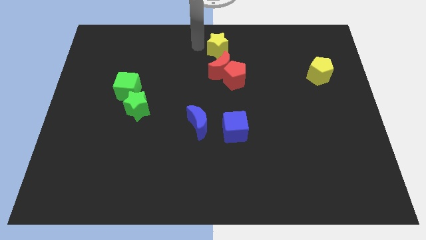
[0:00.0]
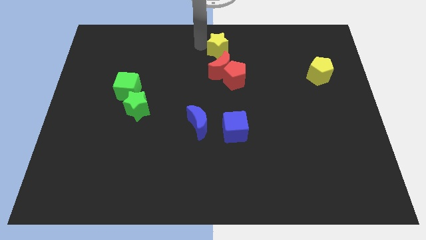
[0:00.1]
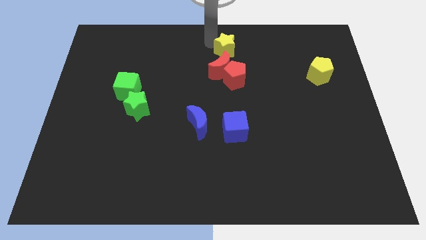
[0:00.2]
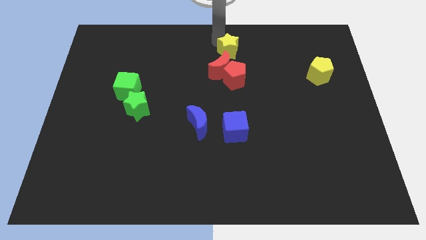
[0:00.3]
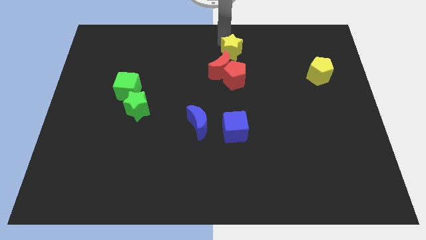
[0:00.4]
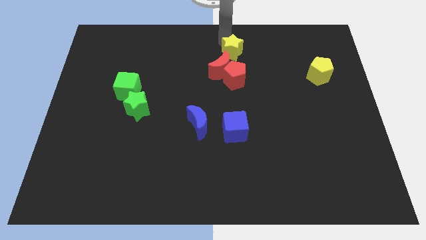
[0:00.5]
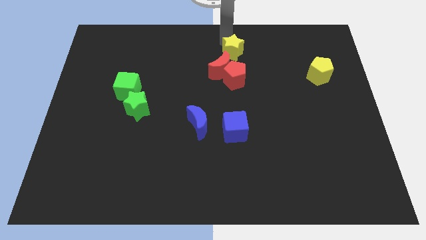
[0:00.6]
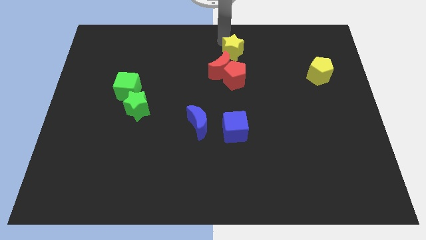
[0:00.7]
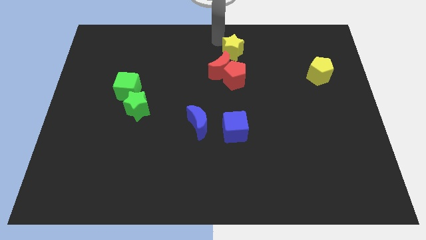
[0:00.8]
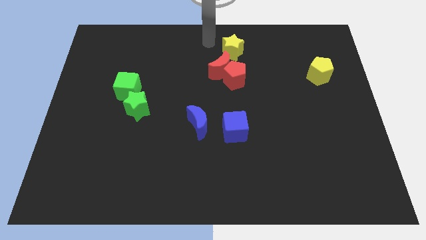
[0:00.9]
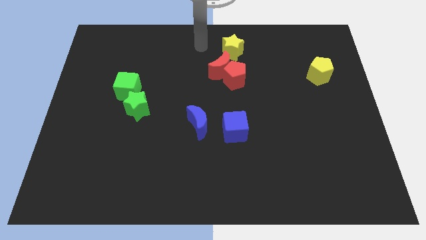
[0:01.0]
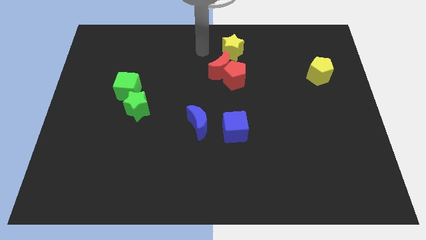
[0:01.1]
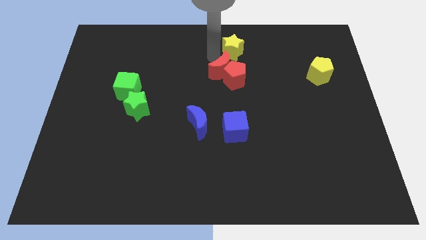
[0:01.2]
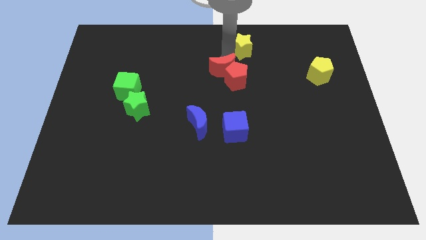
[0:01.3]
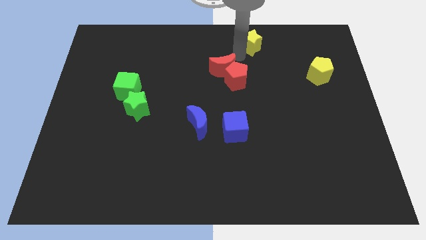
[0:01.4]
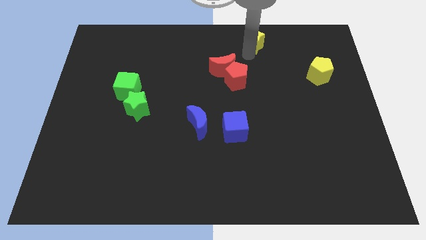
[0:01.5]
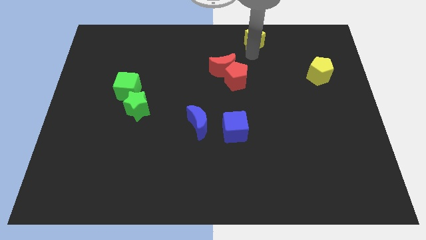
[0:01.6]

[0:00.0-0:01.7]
push the yellow star diagonally top right of the red crescent

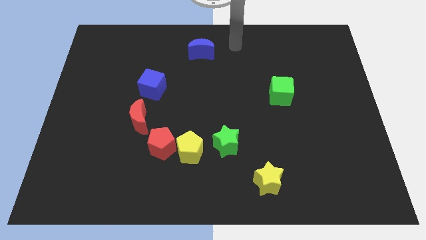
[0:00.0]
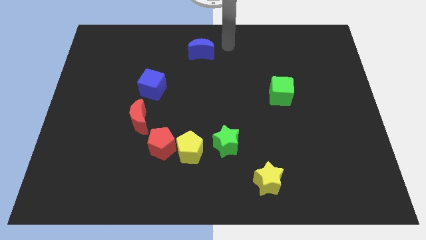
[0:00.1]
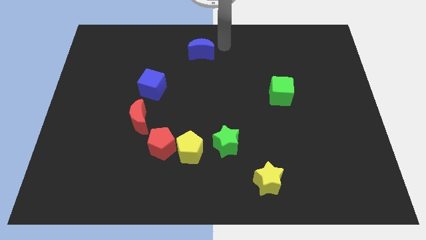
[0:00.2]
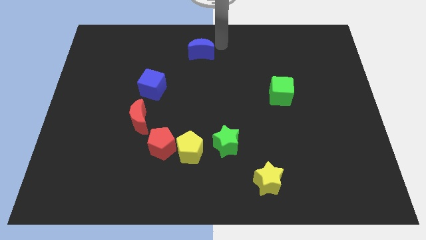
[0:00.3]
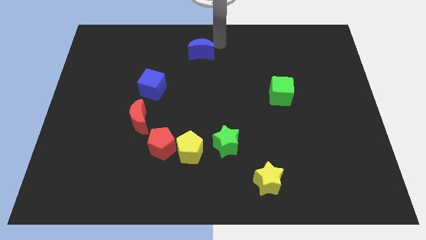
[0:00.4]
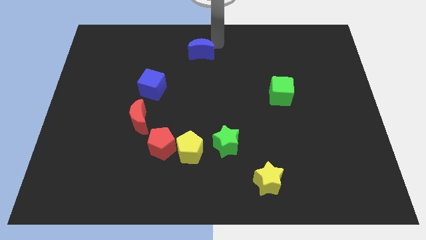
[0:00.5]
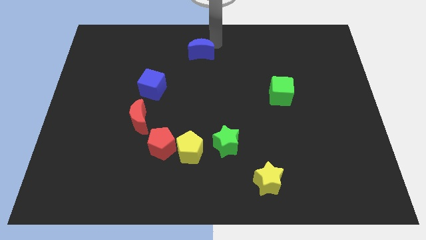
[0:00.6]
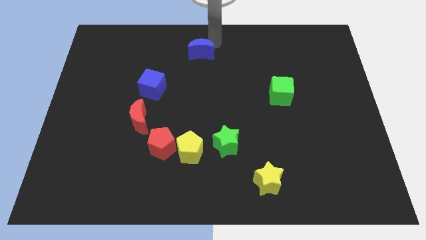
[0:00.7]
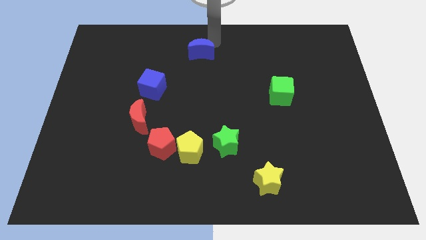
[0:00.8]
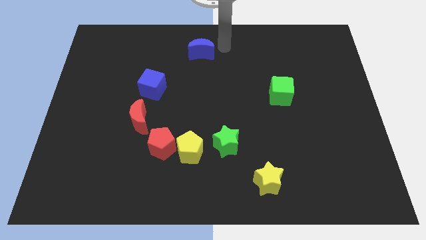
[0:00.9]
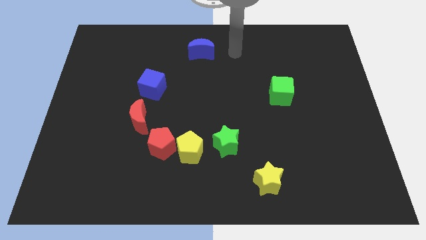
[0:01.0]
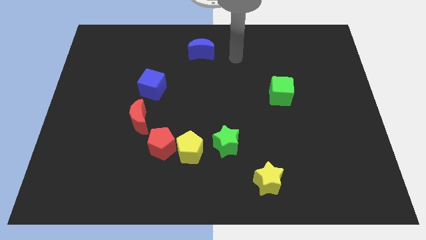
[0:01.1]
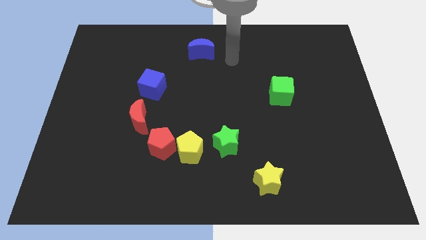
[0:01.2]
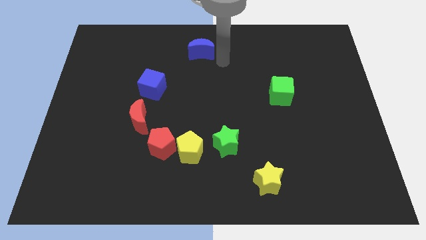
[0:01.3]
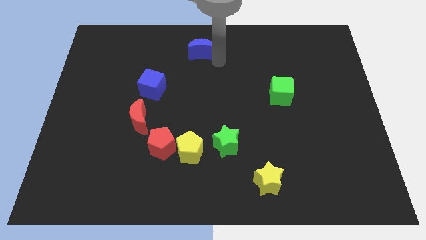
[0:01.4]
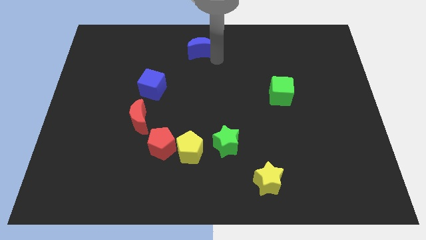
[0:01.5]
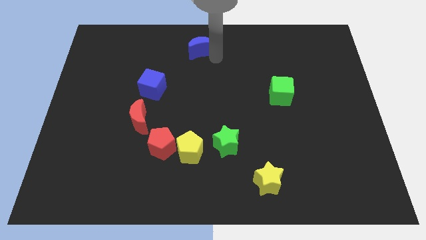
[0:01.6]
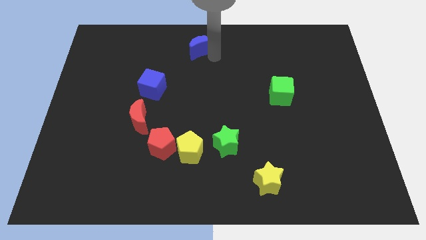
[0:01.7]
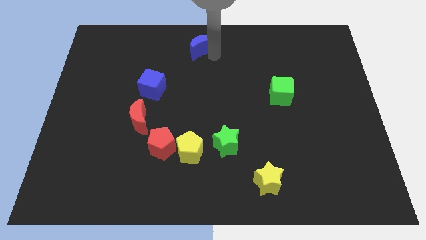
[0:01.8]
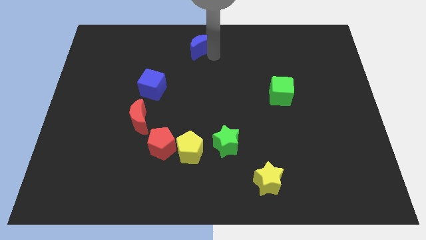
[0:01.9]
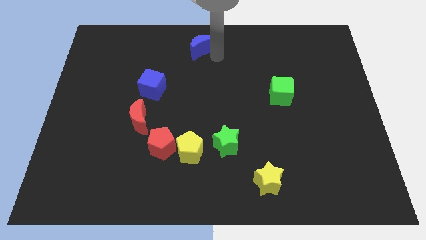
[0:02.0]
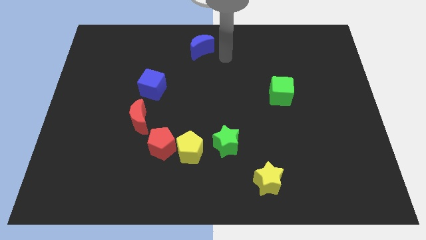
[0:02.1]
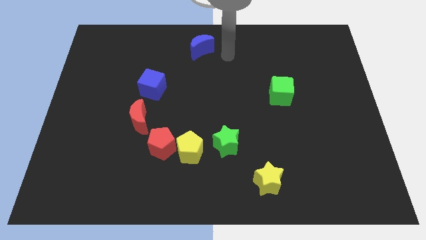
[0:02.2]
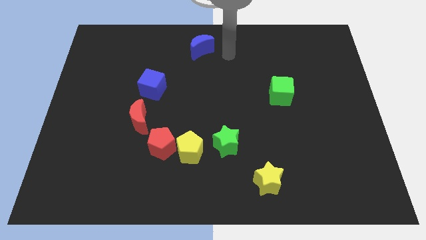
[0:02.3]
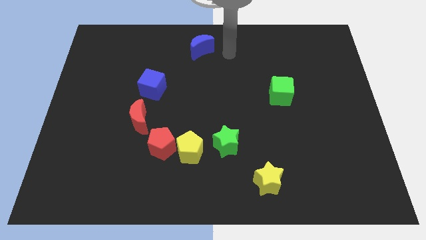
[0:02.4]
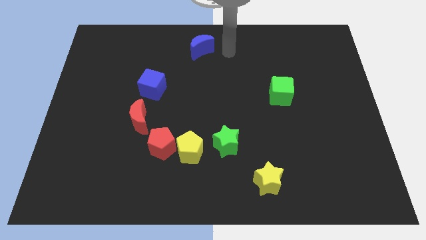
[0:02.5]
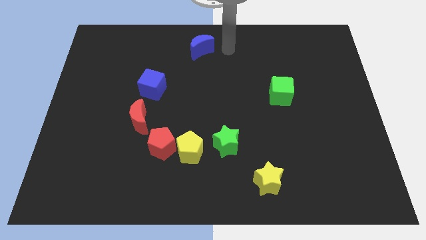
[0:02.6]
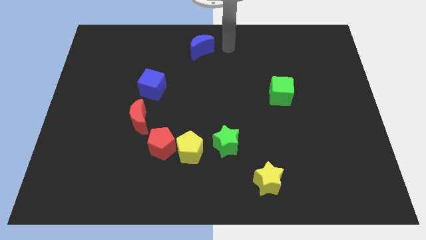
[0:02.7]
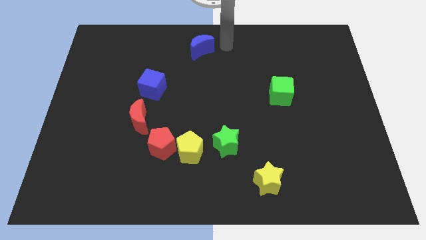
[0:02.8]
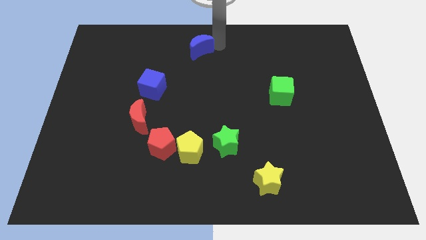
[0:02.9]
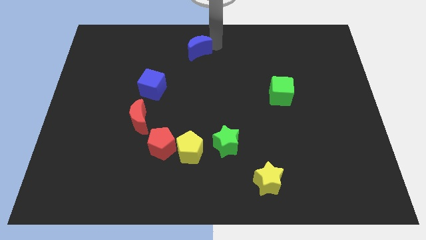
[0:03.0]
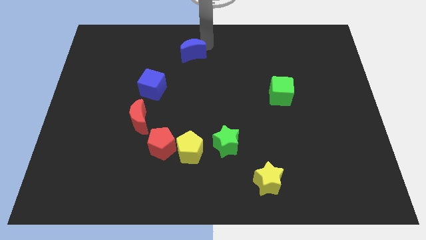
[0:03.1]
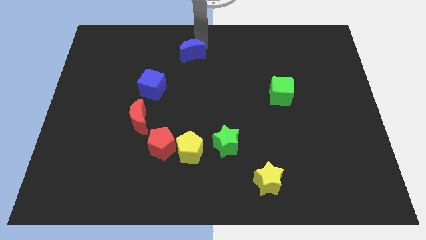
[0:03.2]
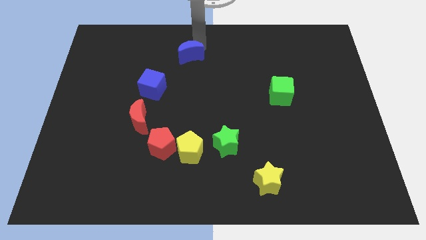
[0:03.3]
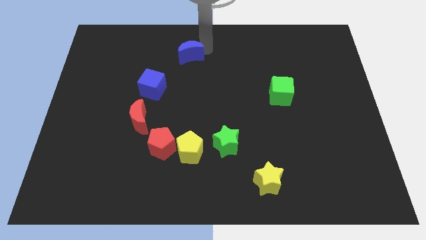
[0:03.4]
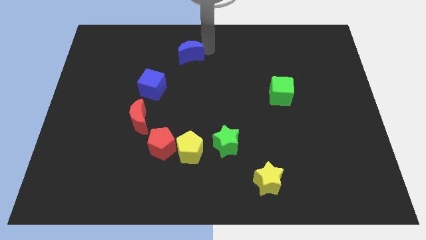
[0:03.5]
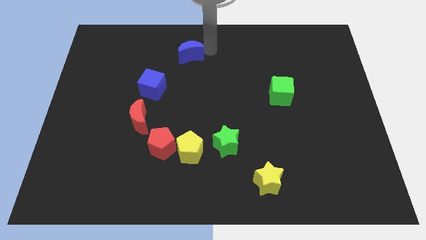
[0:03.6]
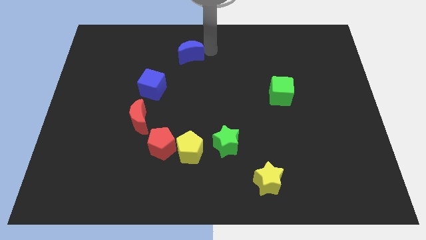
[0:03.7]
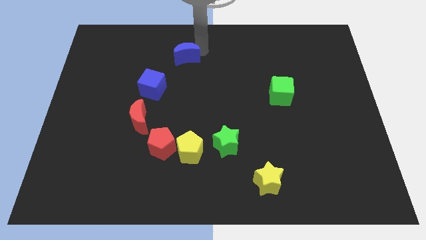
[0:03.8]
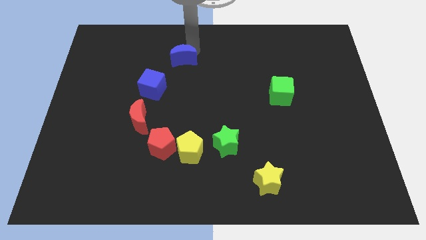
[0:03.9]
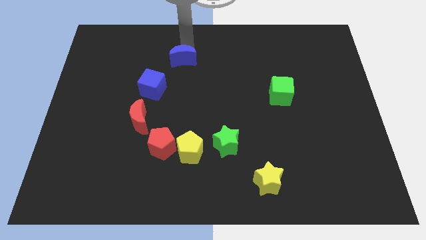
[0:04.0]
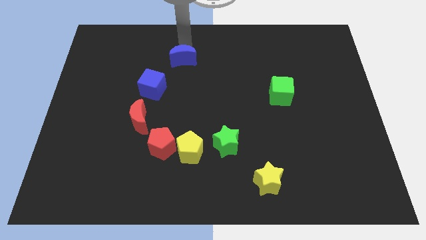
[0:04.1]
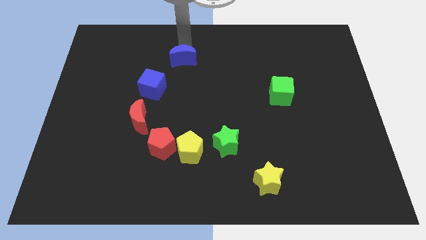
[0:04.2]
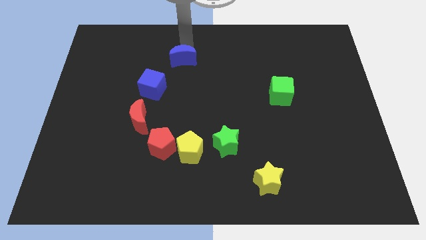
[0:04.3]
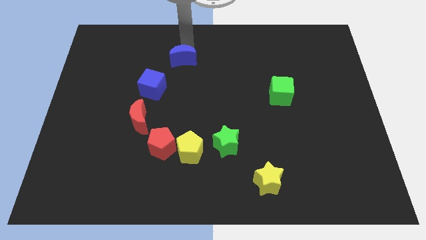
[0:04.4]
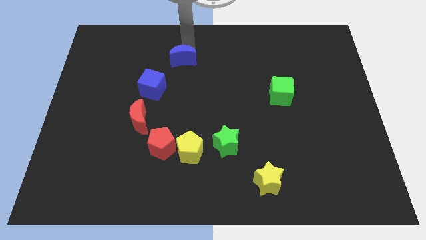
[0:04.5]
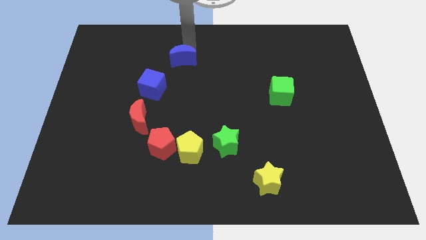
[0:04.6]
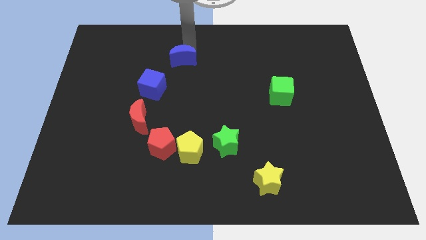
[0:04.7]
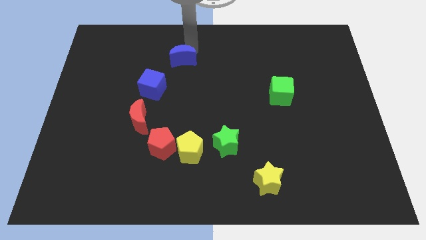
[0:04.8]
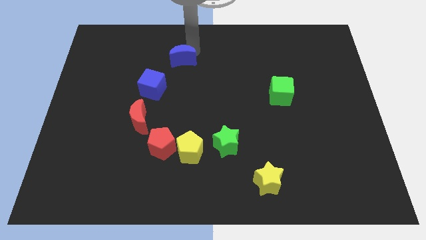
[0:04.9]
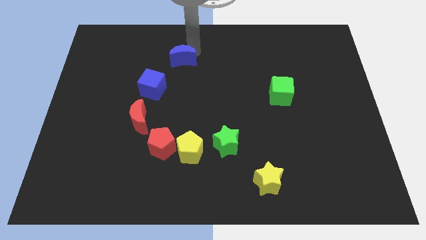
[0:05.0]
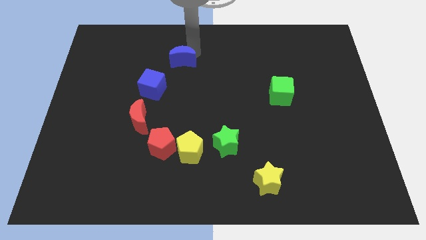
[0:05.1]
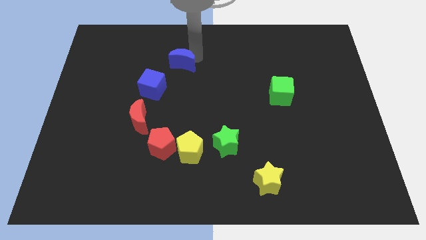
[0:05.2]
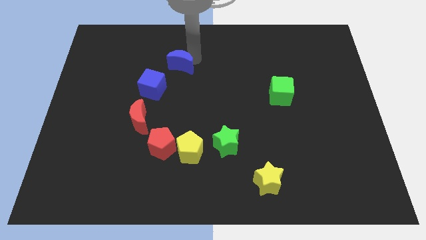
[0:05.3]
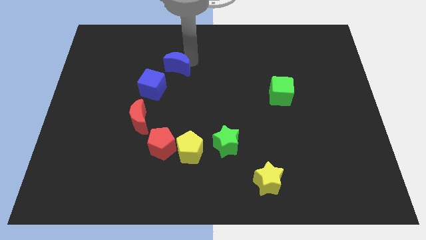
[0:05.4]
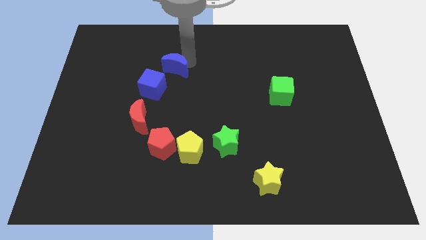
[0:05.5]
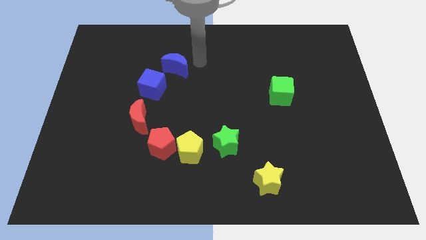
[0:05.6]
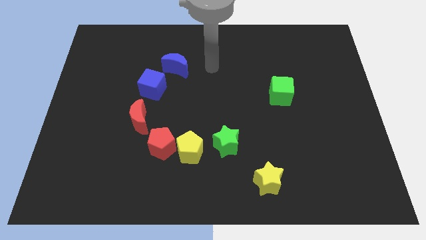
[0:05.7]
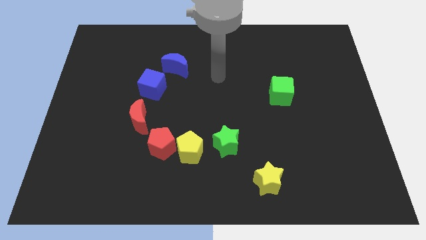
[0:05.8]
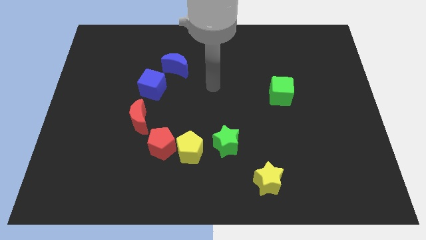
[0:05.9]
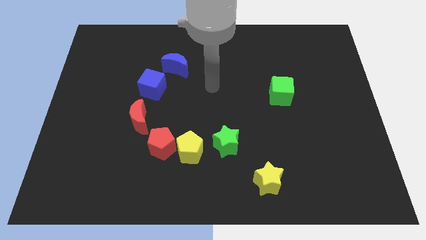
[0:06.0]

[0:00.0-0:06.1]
place the blue moon diagonally right to the blue cube

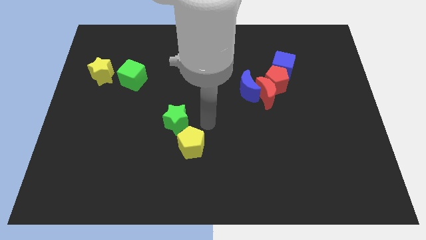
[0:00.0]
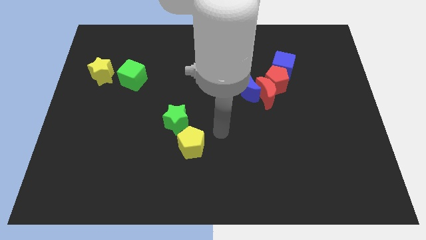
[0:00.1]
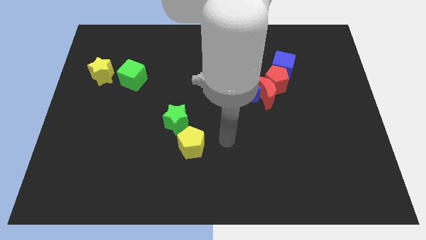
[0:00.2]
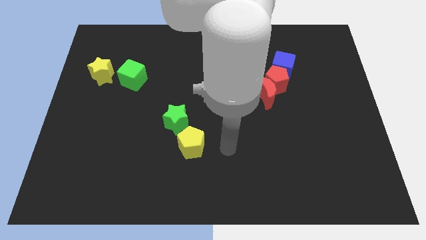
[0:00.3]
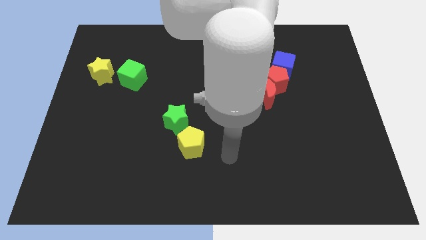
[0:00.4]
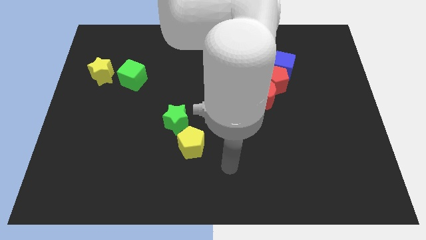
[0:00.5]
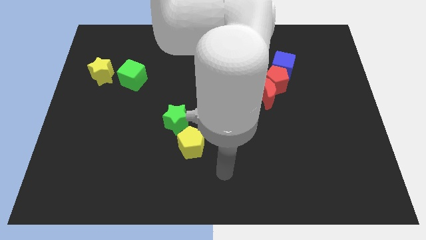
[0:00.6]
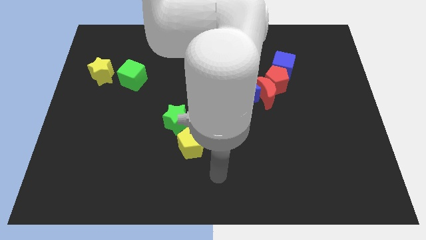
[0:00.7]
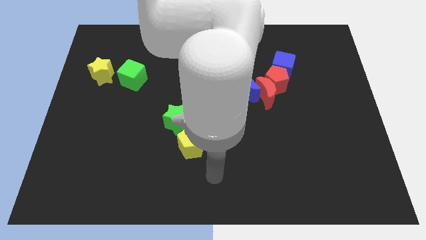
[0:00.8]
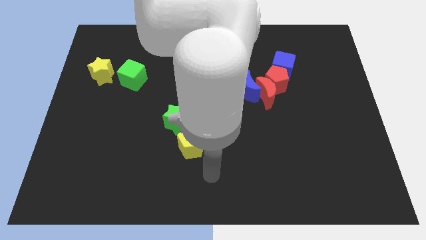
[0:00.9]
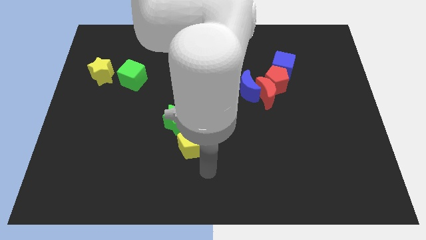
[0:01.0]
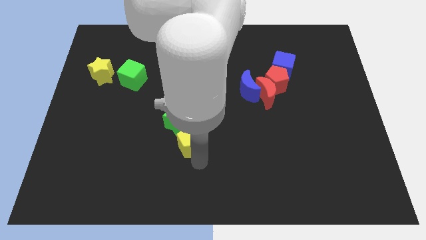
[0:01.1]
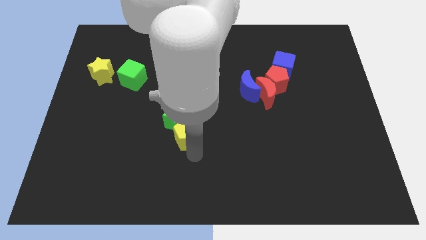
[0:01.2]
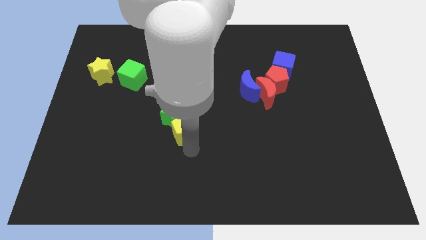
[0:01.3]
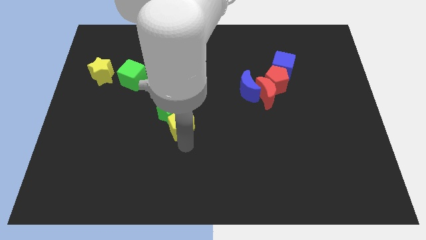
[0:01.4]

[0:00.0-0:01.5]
push the yellow pentagon into the green star
